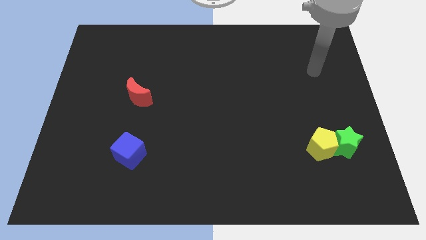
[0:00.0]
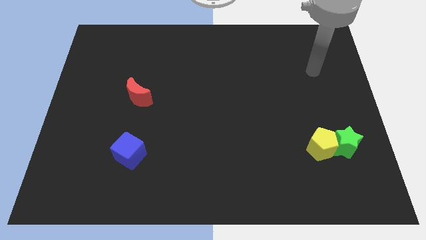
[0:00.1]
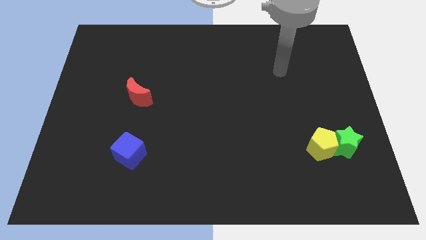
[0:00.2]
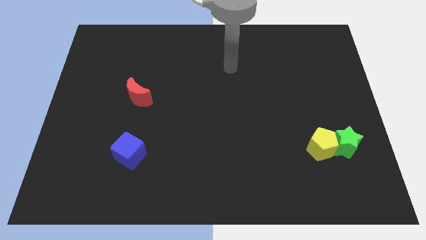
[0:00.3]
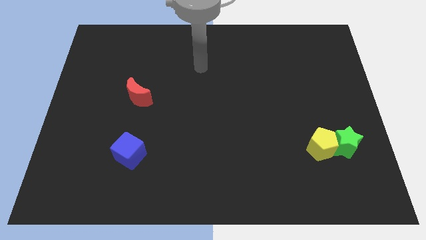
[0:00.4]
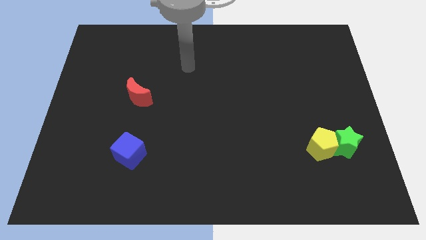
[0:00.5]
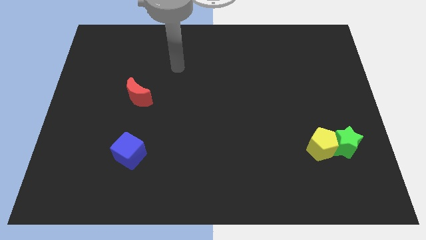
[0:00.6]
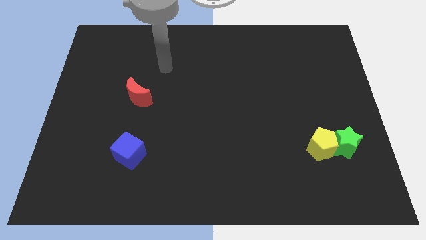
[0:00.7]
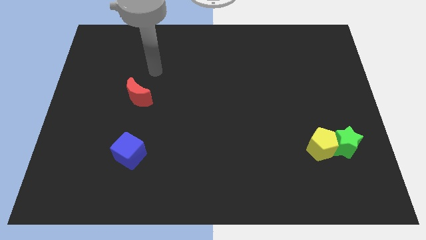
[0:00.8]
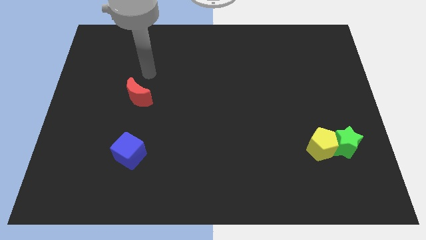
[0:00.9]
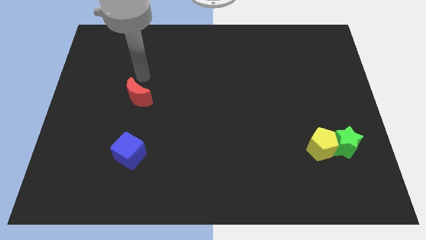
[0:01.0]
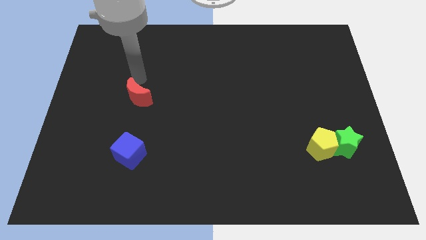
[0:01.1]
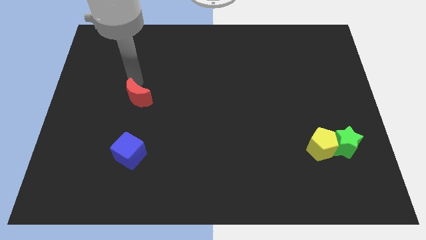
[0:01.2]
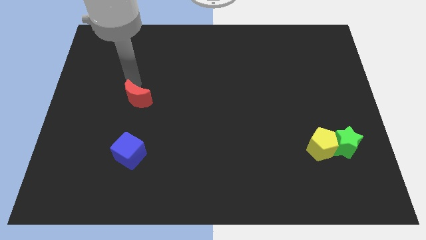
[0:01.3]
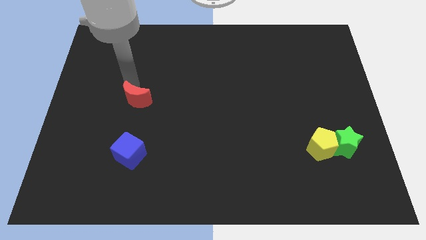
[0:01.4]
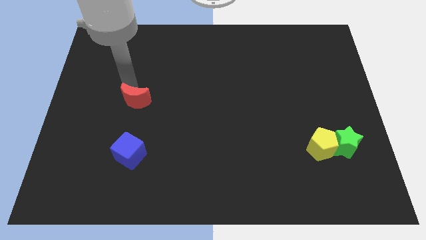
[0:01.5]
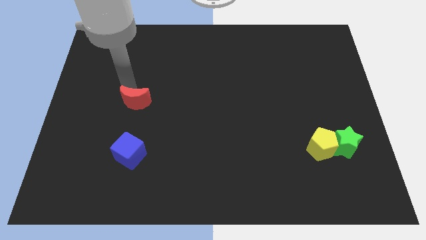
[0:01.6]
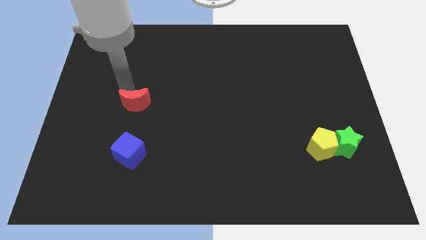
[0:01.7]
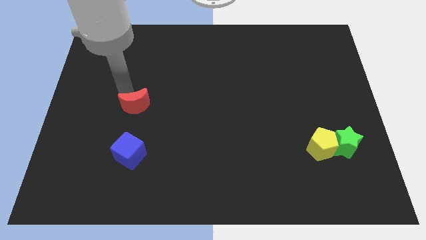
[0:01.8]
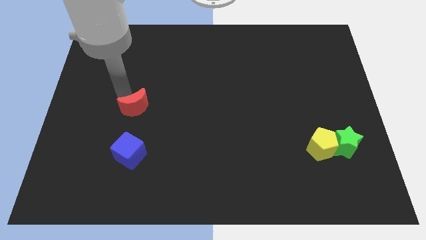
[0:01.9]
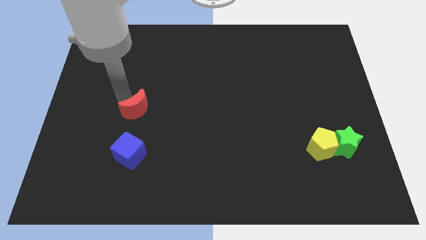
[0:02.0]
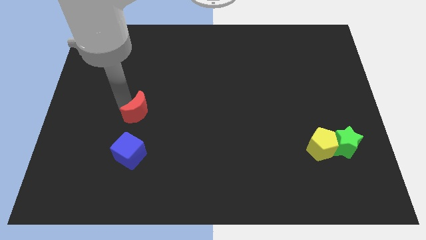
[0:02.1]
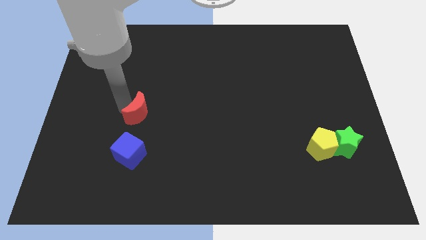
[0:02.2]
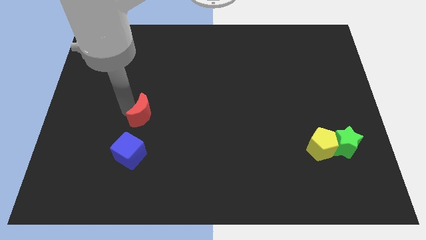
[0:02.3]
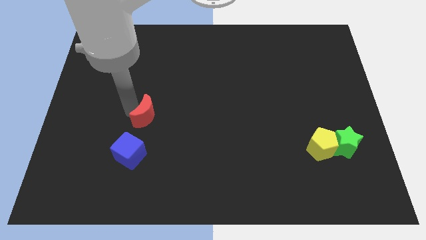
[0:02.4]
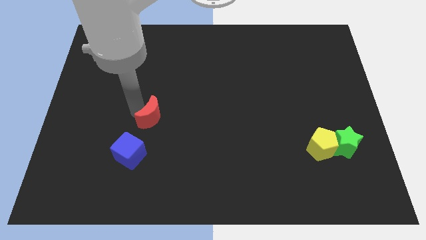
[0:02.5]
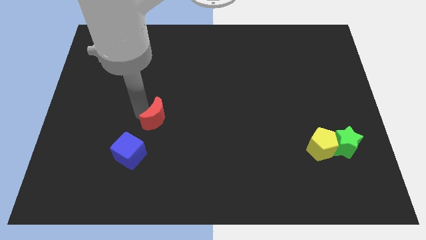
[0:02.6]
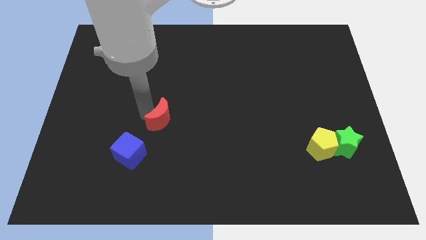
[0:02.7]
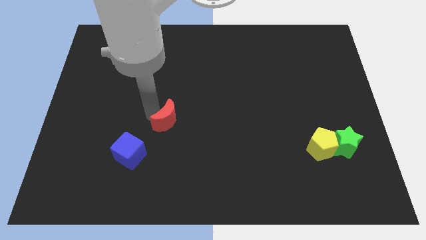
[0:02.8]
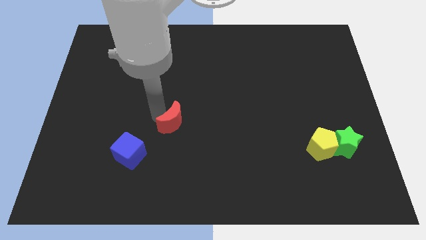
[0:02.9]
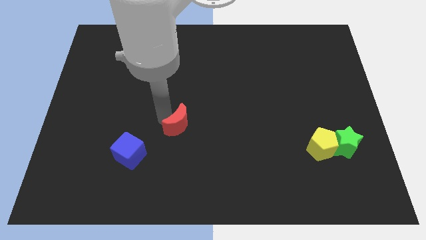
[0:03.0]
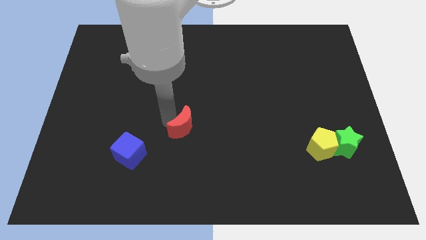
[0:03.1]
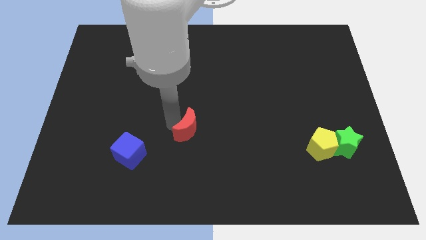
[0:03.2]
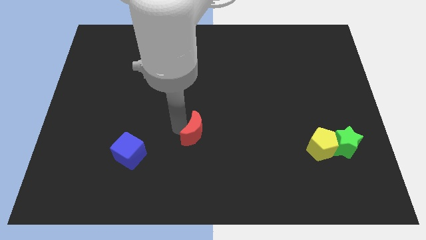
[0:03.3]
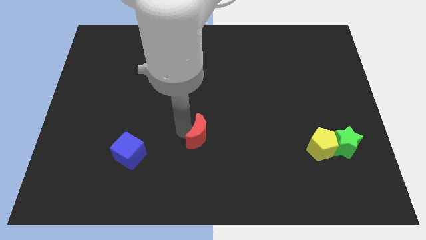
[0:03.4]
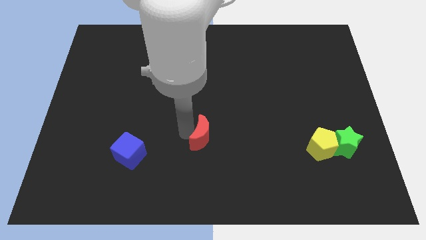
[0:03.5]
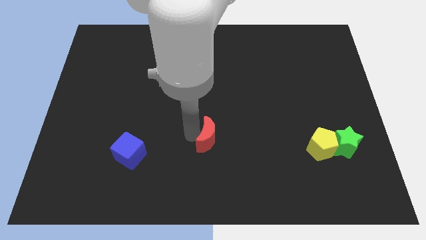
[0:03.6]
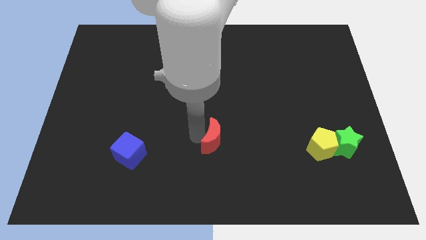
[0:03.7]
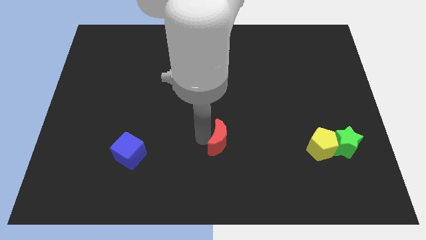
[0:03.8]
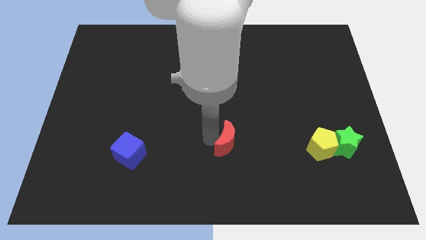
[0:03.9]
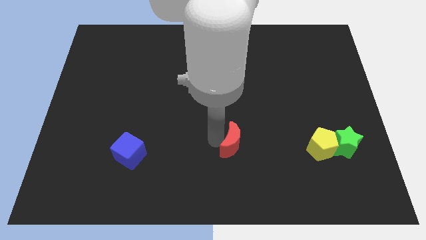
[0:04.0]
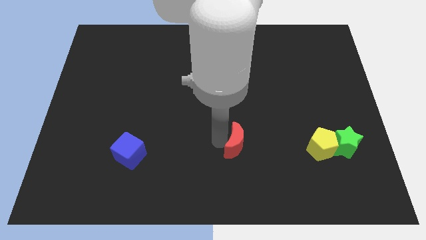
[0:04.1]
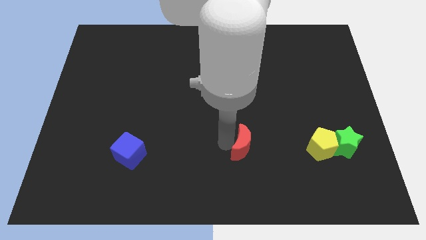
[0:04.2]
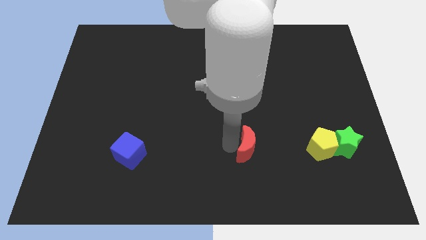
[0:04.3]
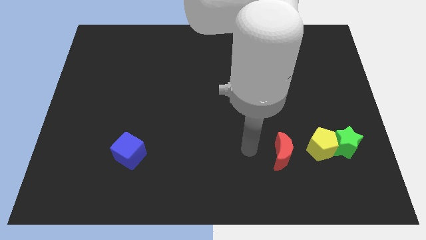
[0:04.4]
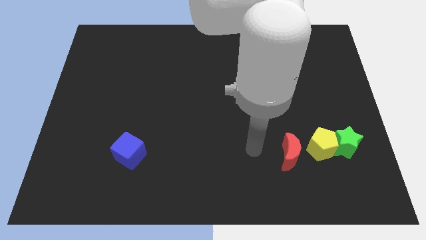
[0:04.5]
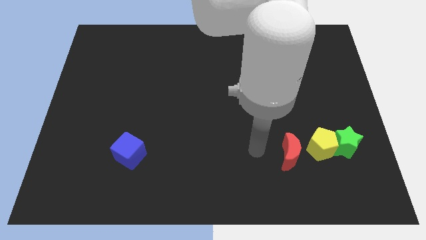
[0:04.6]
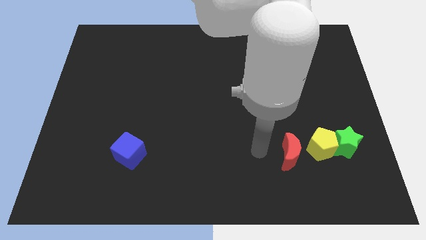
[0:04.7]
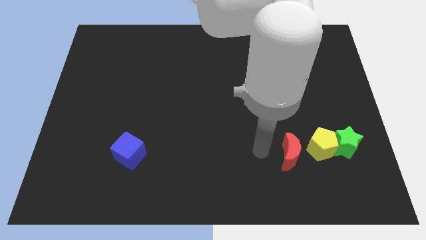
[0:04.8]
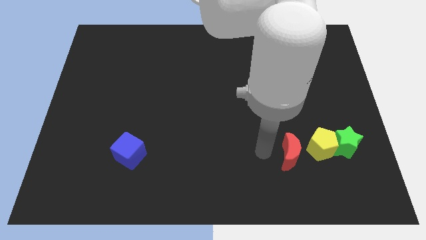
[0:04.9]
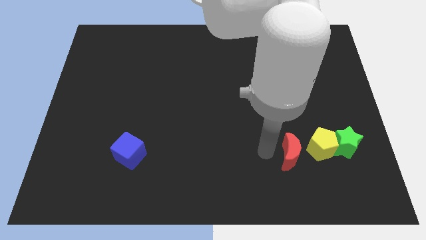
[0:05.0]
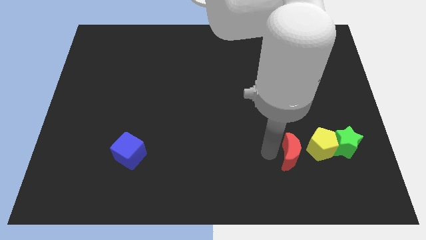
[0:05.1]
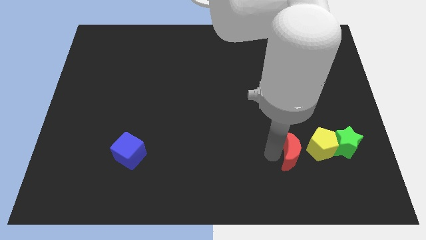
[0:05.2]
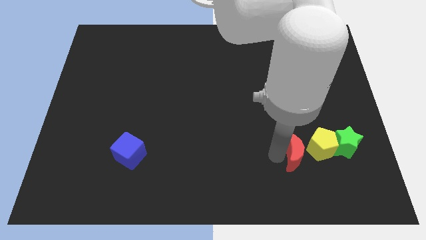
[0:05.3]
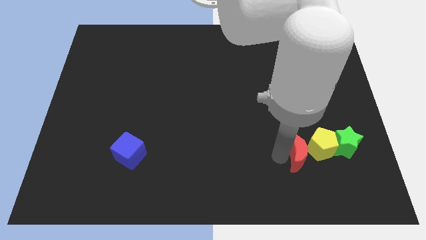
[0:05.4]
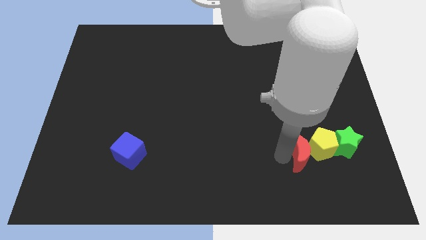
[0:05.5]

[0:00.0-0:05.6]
put the red moon towards the pentagon

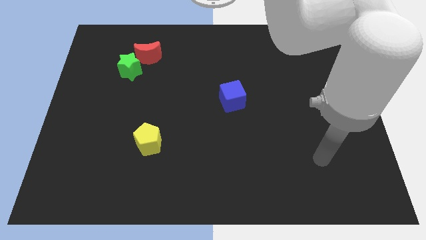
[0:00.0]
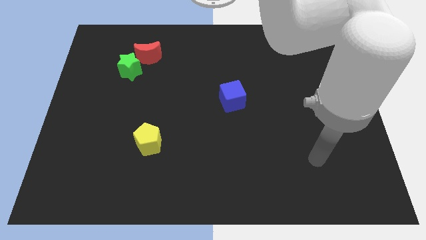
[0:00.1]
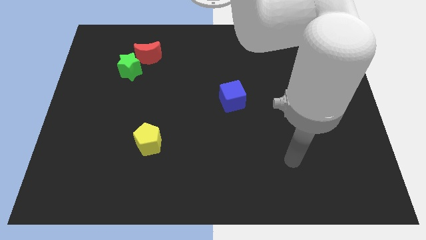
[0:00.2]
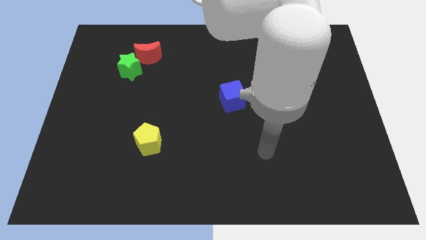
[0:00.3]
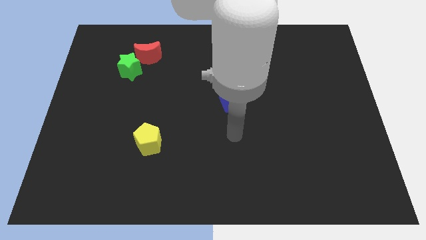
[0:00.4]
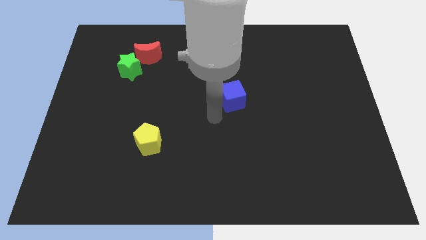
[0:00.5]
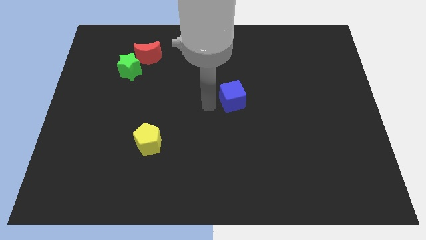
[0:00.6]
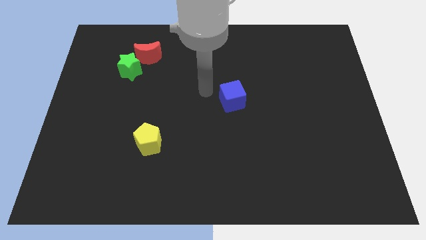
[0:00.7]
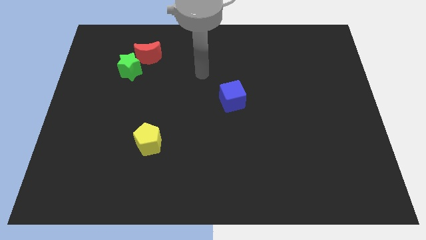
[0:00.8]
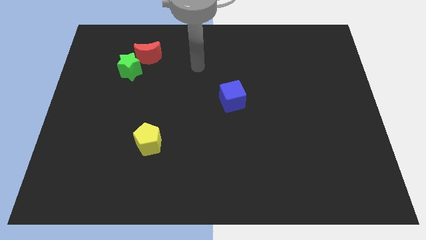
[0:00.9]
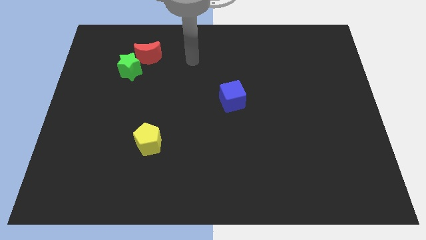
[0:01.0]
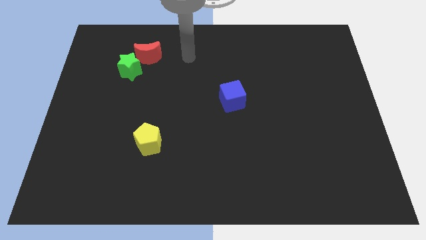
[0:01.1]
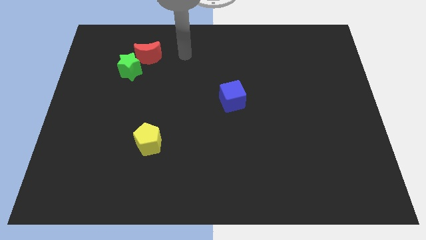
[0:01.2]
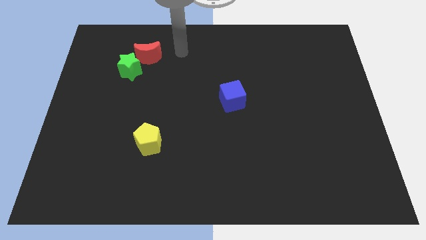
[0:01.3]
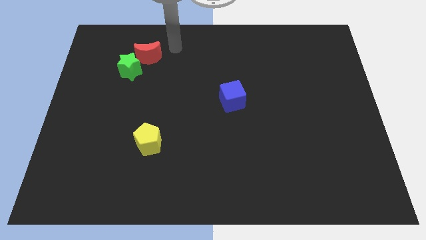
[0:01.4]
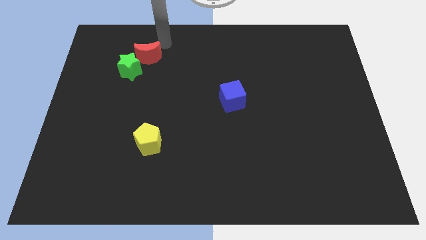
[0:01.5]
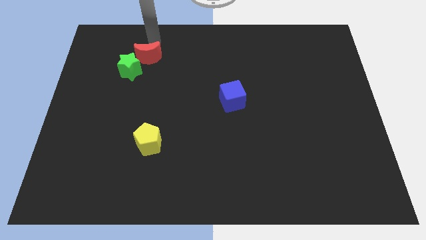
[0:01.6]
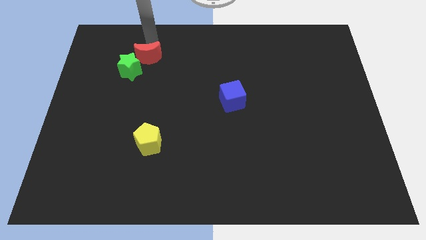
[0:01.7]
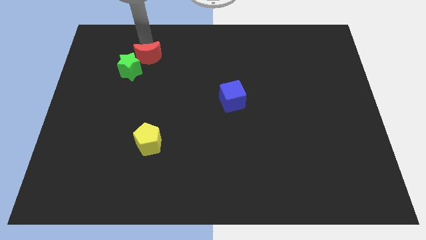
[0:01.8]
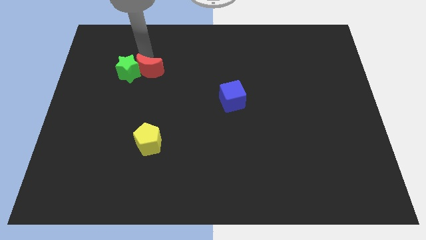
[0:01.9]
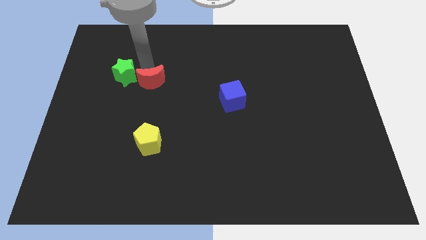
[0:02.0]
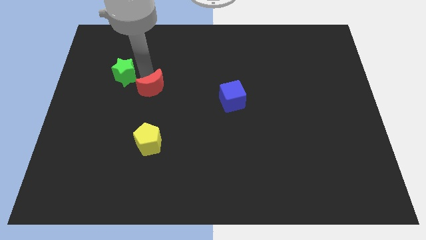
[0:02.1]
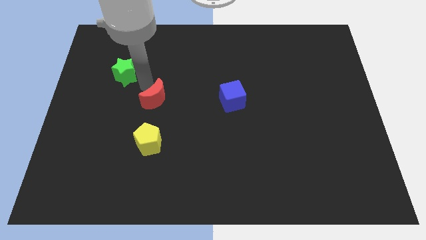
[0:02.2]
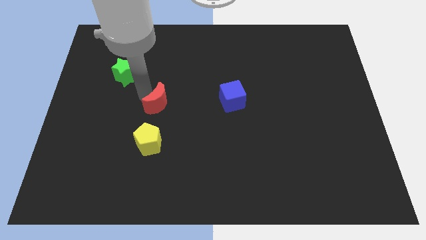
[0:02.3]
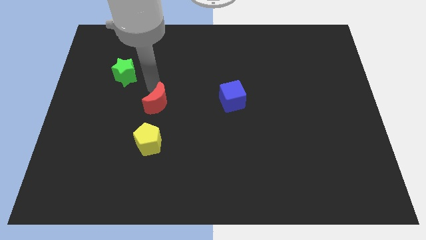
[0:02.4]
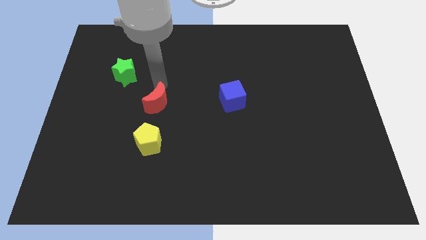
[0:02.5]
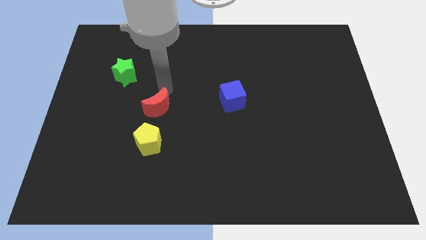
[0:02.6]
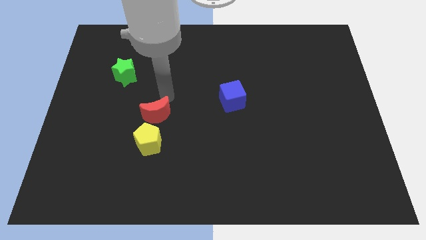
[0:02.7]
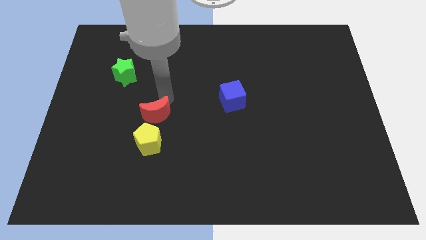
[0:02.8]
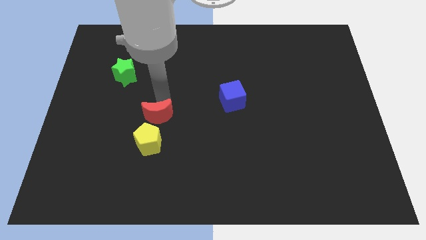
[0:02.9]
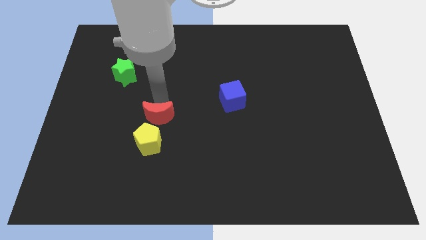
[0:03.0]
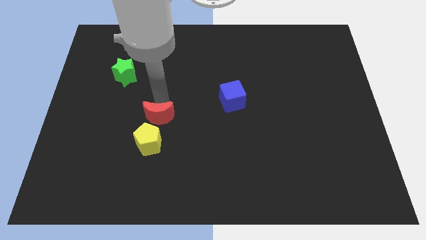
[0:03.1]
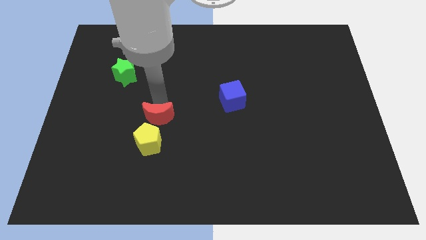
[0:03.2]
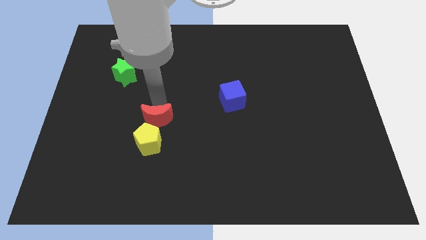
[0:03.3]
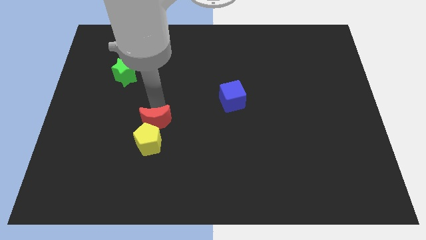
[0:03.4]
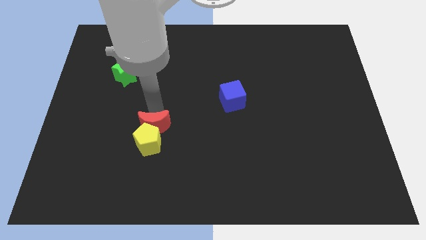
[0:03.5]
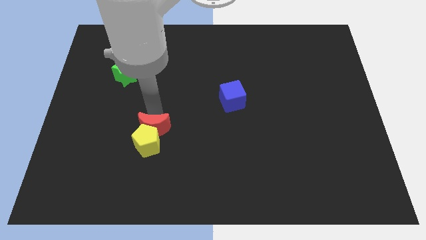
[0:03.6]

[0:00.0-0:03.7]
push the moon close to the yellow block
